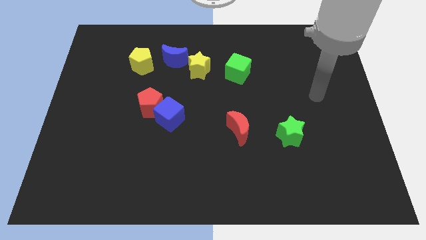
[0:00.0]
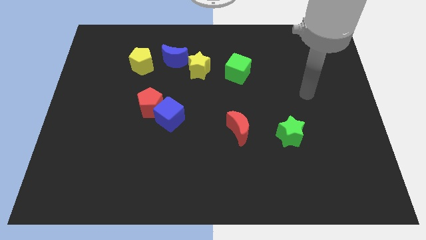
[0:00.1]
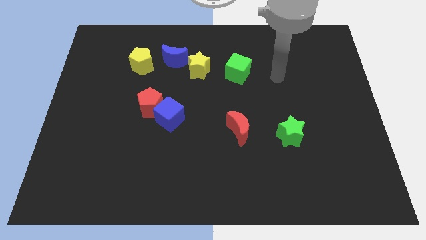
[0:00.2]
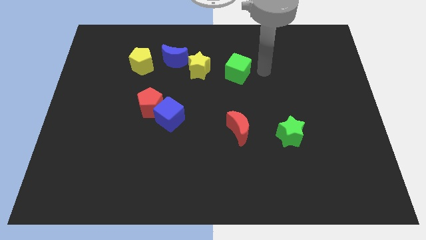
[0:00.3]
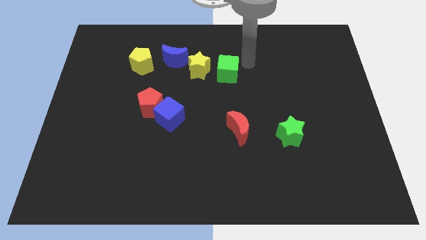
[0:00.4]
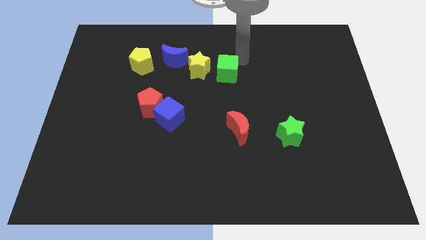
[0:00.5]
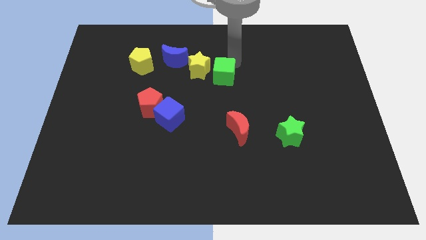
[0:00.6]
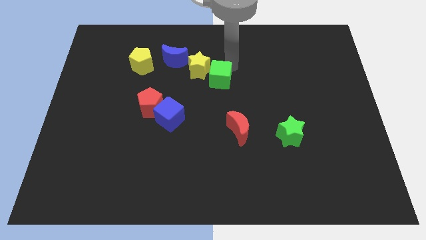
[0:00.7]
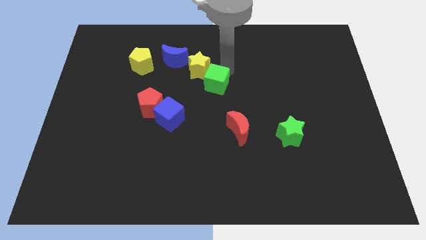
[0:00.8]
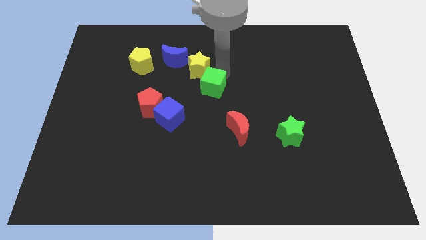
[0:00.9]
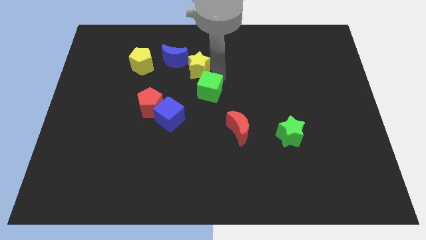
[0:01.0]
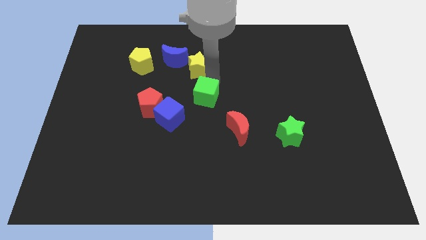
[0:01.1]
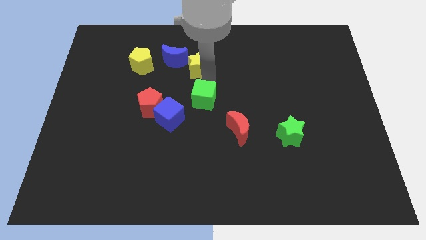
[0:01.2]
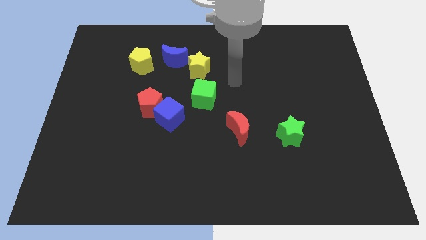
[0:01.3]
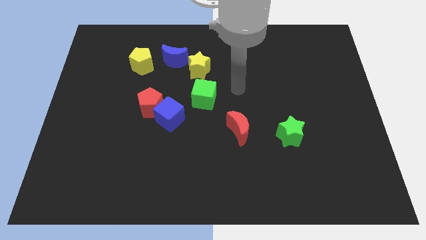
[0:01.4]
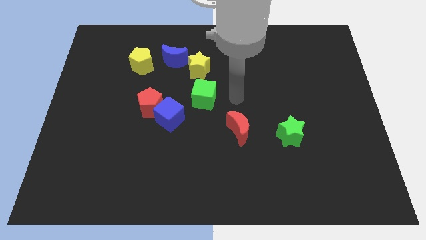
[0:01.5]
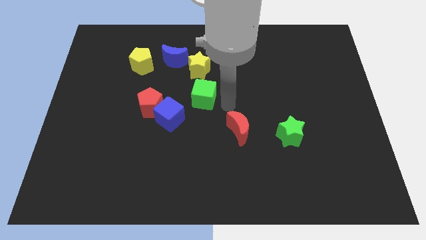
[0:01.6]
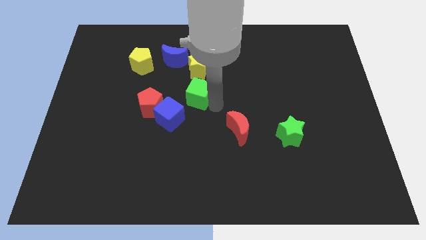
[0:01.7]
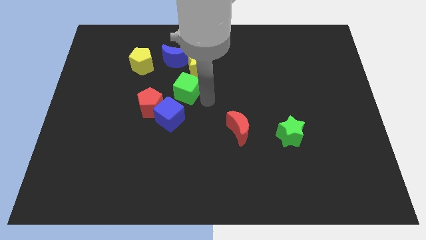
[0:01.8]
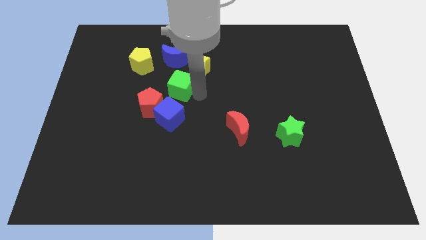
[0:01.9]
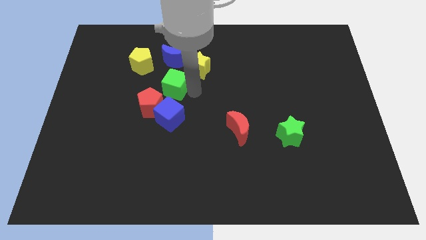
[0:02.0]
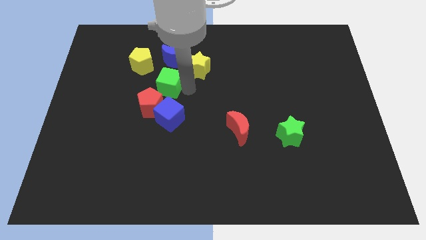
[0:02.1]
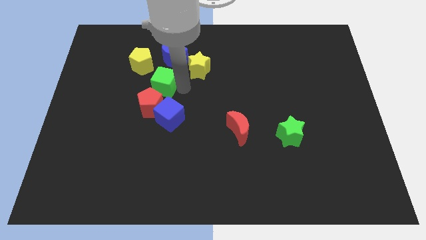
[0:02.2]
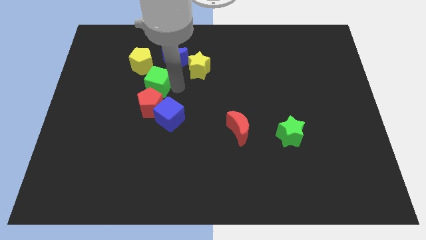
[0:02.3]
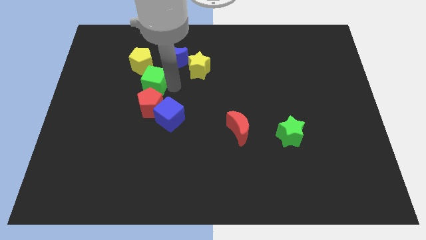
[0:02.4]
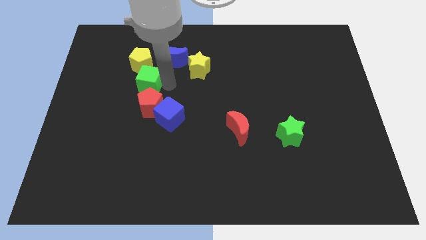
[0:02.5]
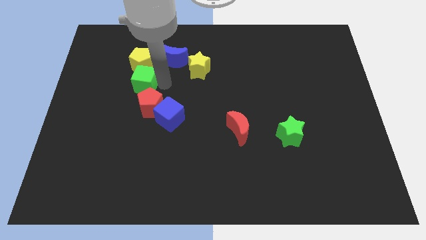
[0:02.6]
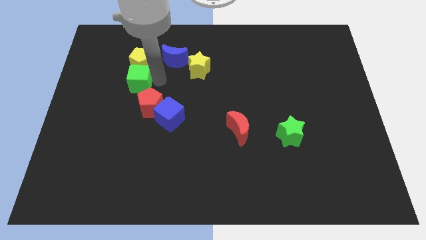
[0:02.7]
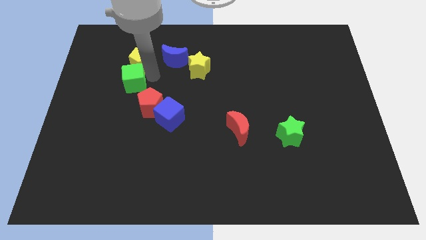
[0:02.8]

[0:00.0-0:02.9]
put the green cube towards the yellow pentagon

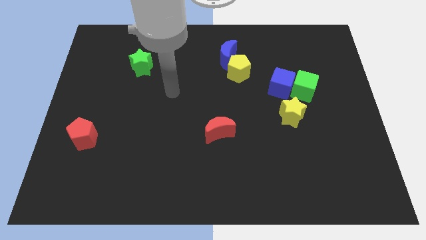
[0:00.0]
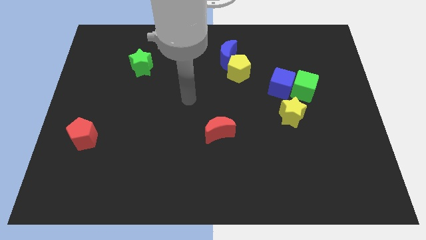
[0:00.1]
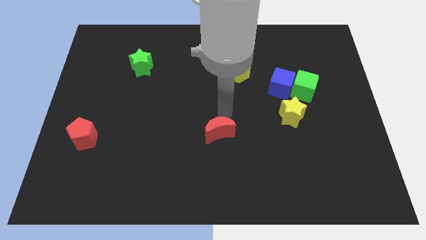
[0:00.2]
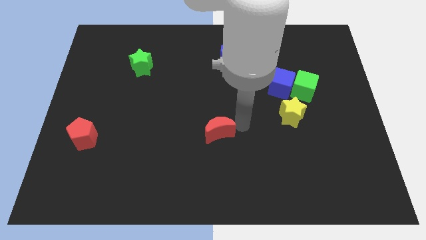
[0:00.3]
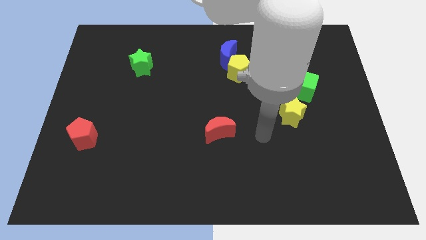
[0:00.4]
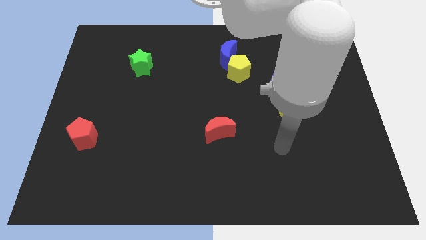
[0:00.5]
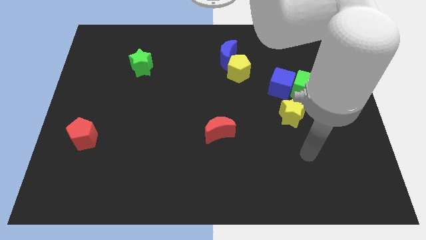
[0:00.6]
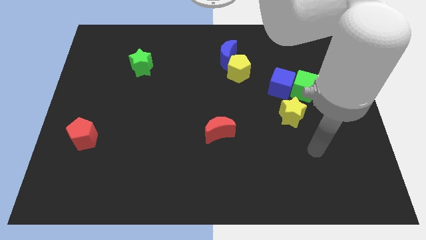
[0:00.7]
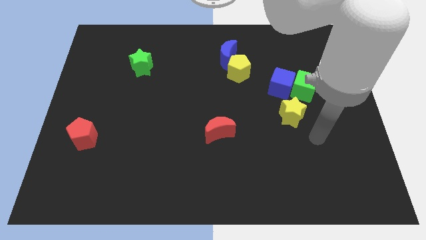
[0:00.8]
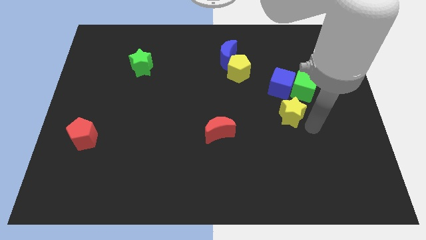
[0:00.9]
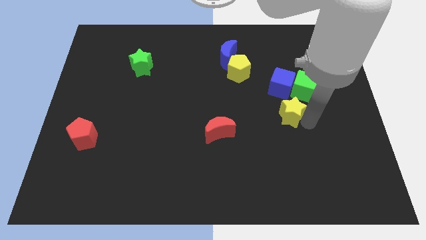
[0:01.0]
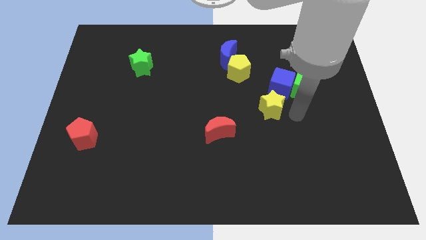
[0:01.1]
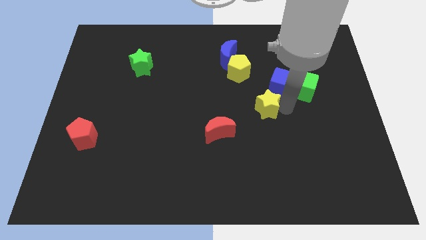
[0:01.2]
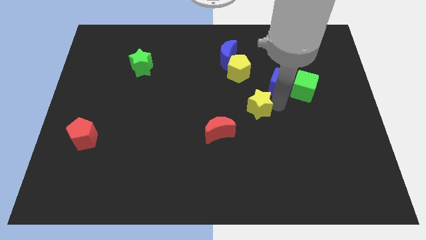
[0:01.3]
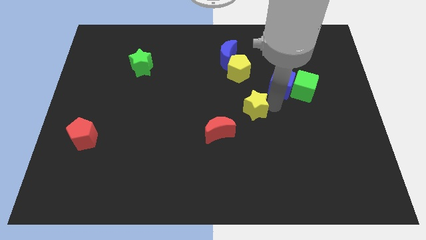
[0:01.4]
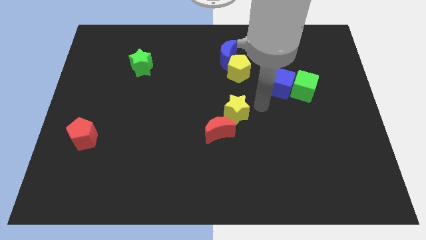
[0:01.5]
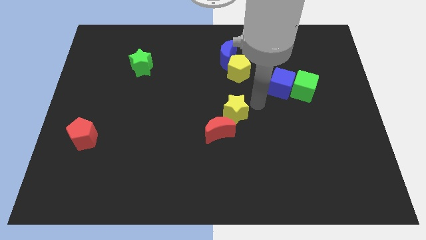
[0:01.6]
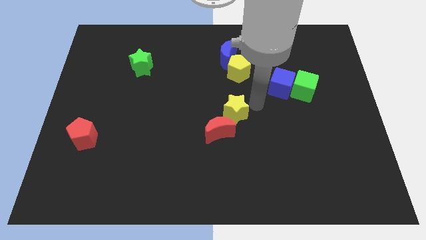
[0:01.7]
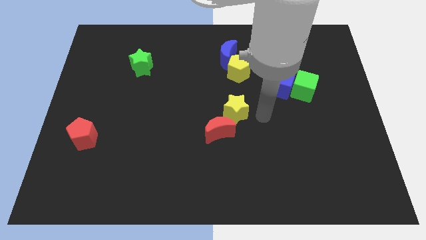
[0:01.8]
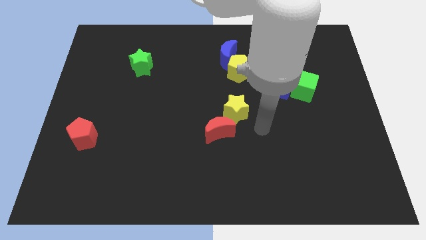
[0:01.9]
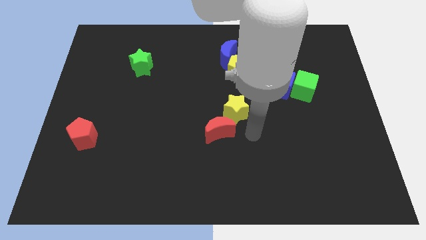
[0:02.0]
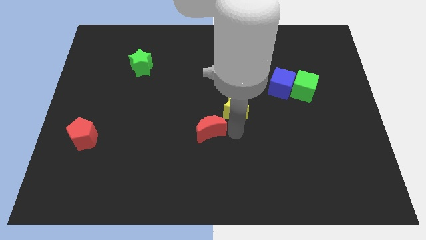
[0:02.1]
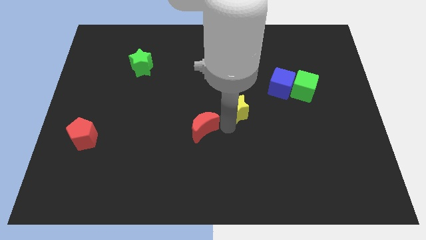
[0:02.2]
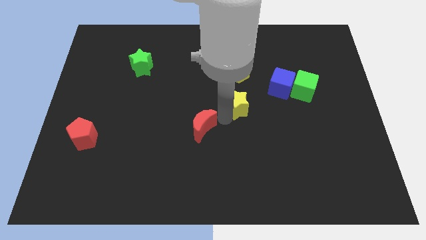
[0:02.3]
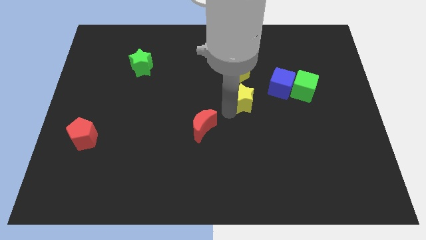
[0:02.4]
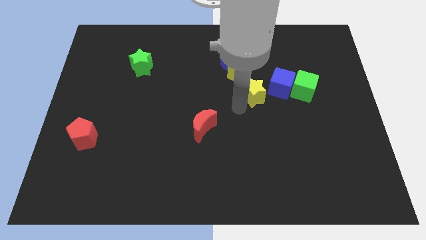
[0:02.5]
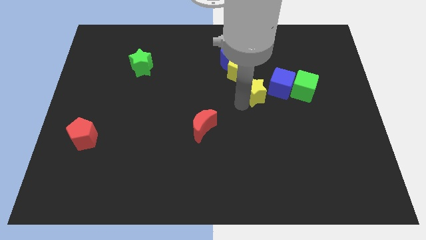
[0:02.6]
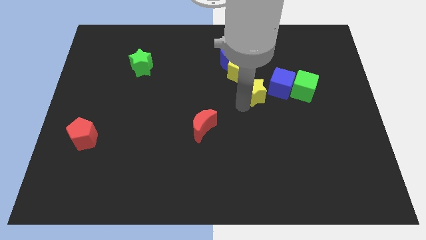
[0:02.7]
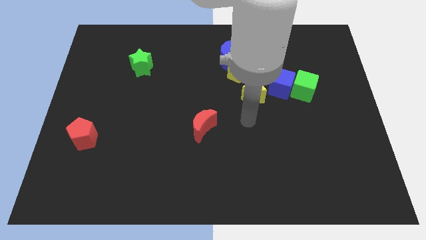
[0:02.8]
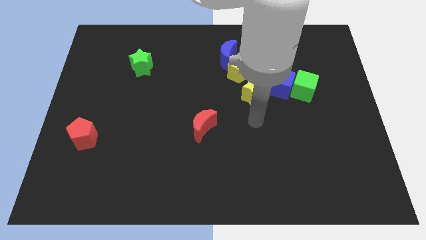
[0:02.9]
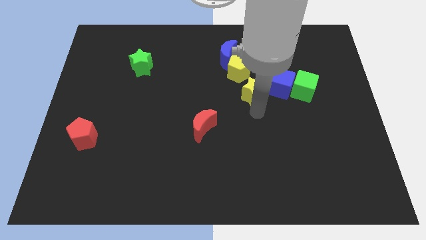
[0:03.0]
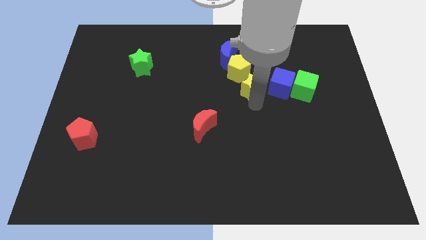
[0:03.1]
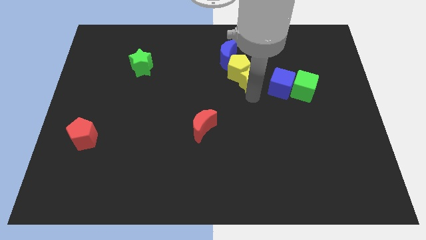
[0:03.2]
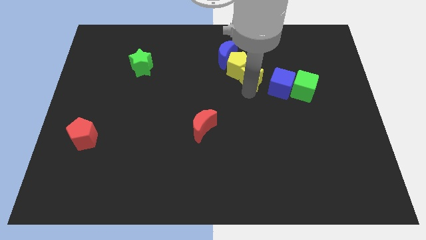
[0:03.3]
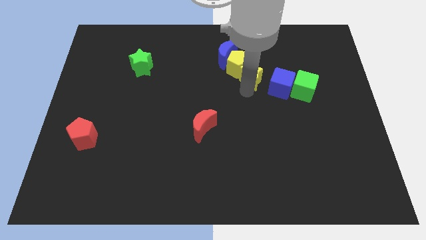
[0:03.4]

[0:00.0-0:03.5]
push the yellow star to the yellow pentagon

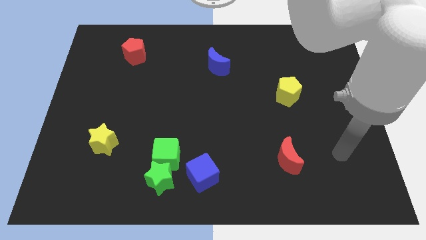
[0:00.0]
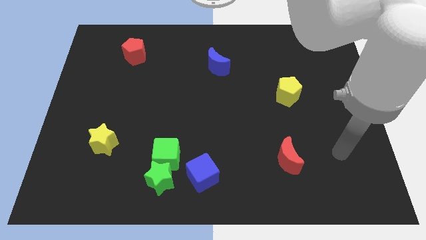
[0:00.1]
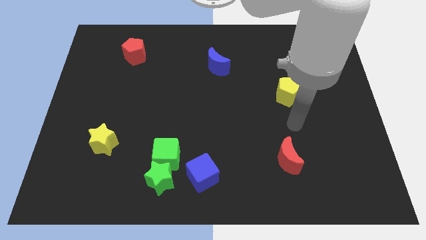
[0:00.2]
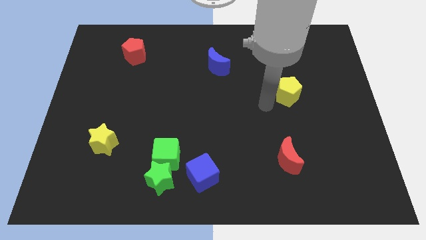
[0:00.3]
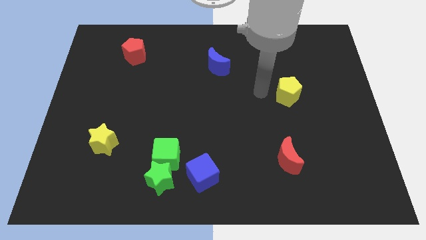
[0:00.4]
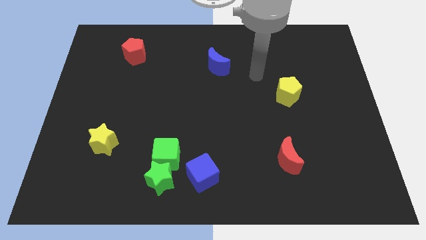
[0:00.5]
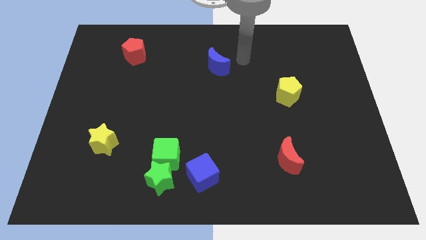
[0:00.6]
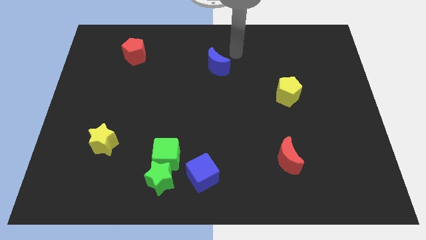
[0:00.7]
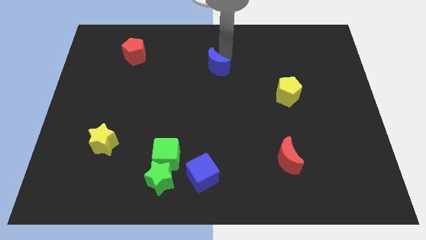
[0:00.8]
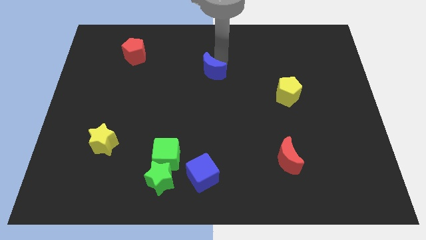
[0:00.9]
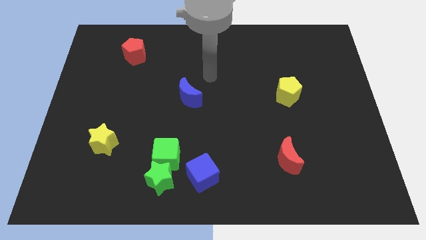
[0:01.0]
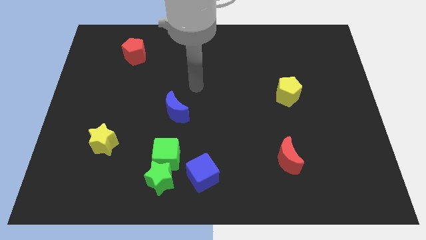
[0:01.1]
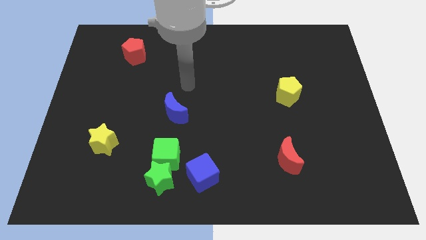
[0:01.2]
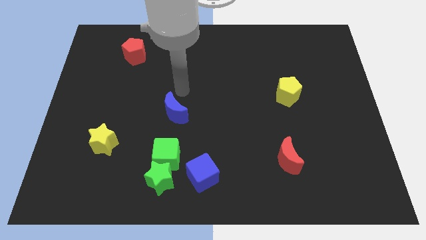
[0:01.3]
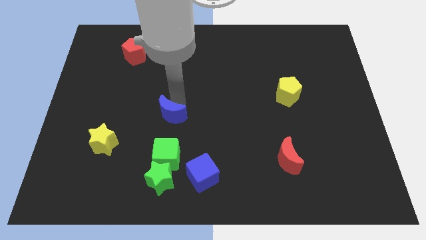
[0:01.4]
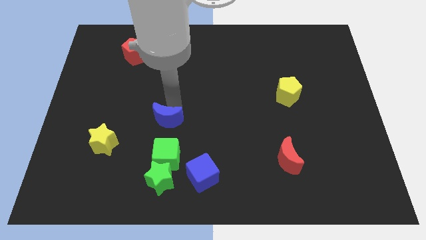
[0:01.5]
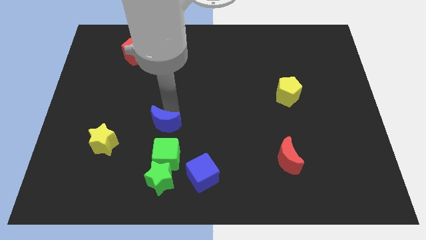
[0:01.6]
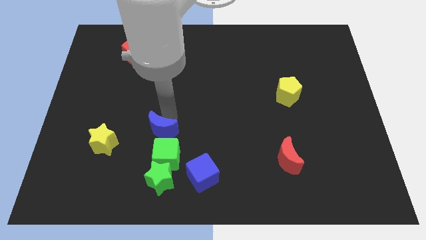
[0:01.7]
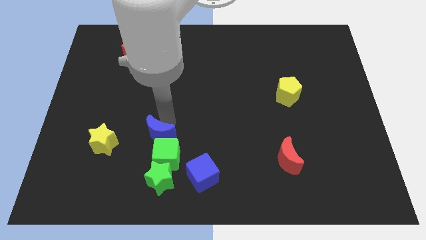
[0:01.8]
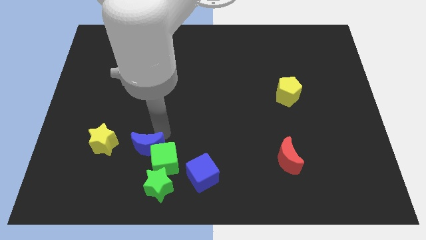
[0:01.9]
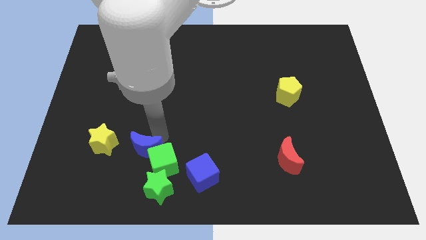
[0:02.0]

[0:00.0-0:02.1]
push the blue moon close to the green cube

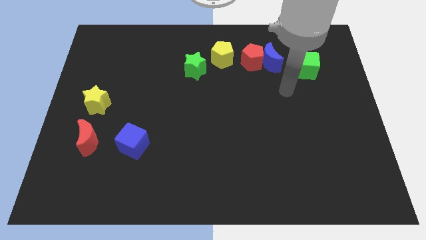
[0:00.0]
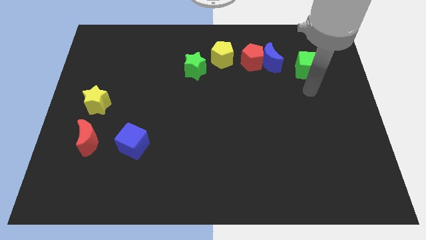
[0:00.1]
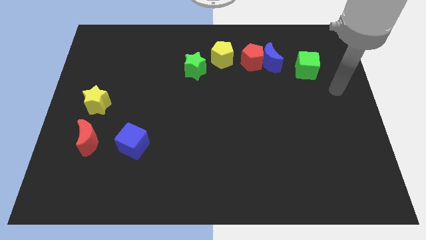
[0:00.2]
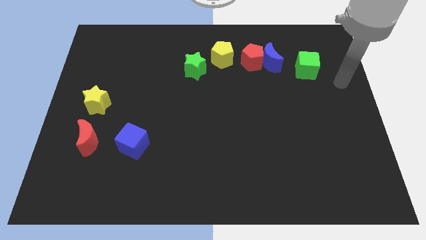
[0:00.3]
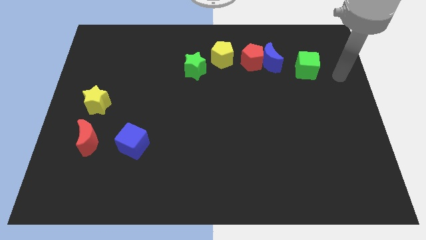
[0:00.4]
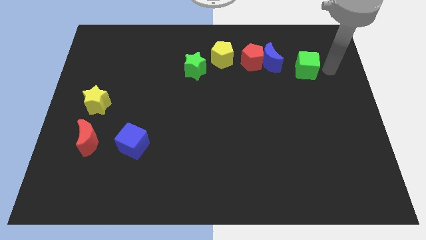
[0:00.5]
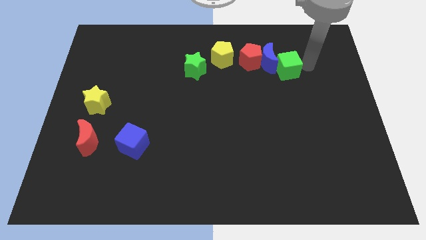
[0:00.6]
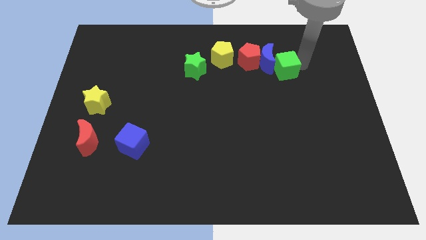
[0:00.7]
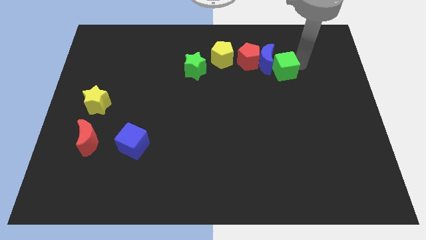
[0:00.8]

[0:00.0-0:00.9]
push the green cube next to the blue moon
